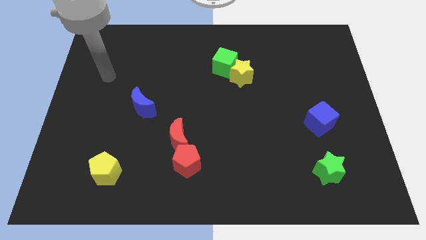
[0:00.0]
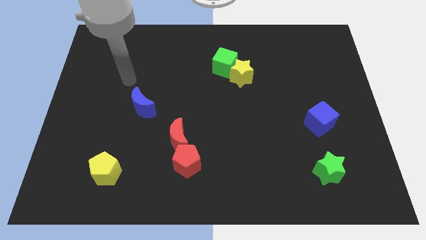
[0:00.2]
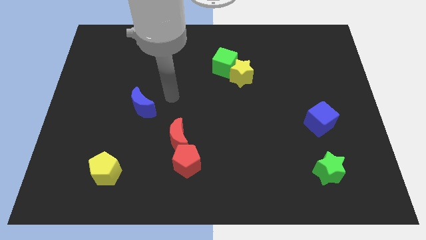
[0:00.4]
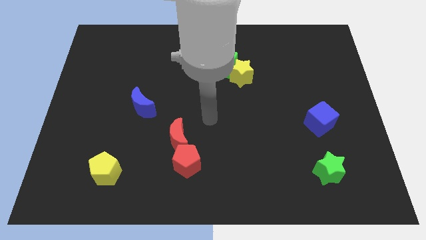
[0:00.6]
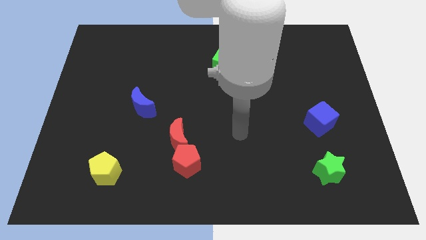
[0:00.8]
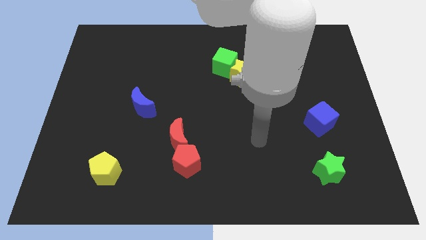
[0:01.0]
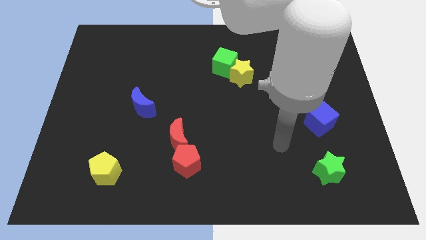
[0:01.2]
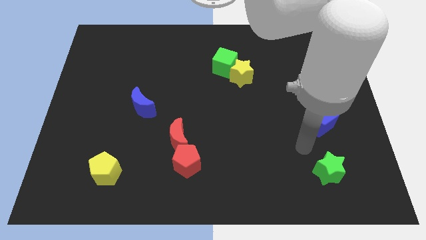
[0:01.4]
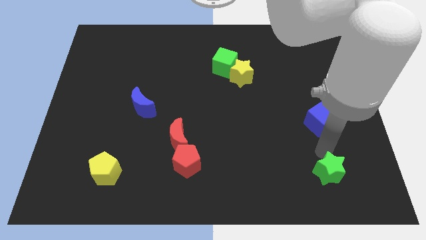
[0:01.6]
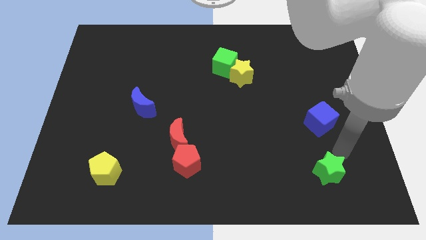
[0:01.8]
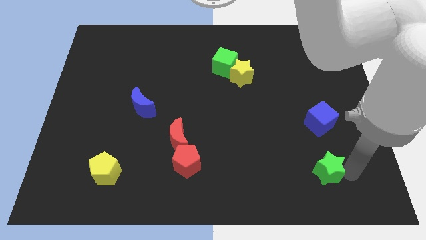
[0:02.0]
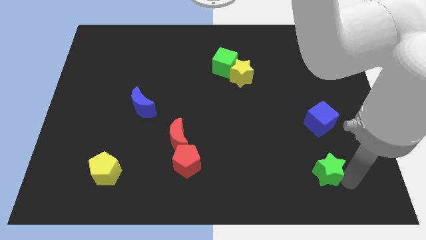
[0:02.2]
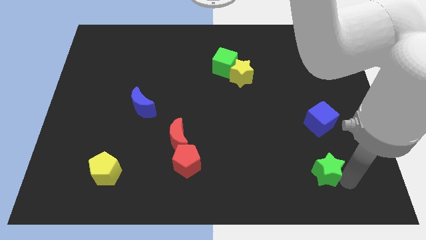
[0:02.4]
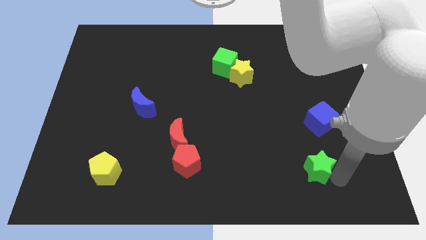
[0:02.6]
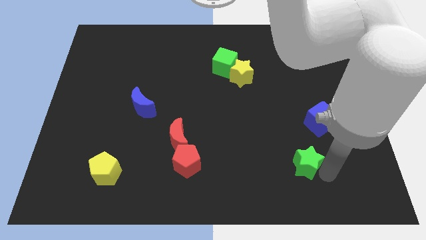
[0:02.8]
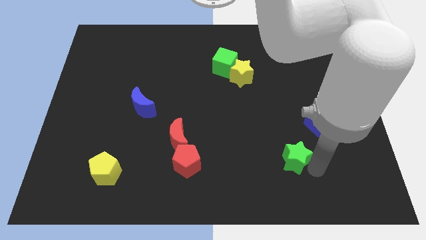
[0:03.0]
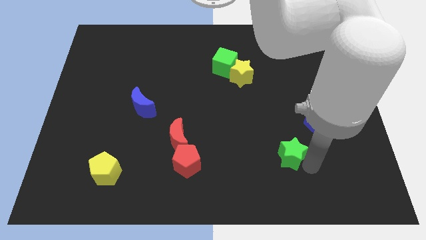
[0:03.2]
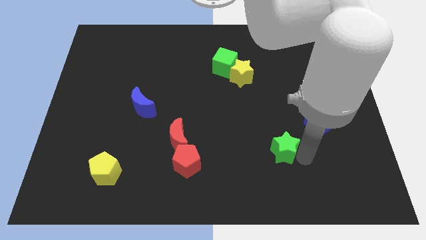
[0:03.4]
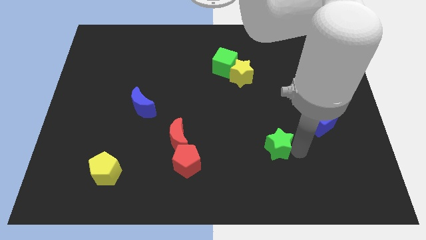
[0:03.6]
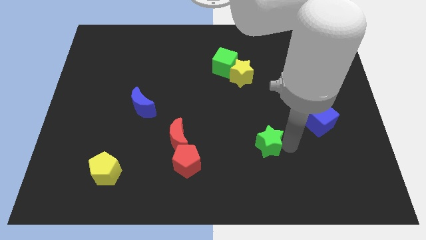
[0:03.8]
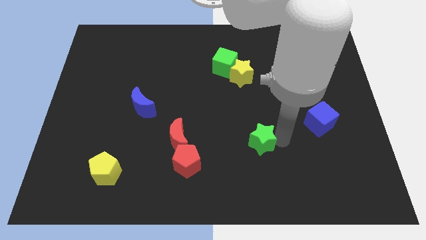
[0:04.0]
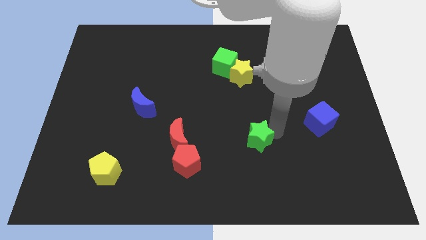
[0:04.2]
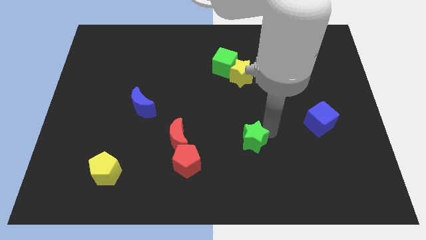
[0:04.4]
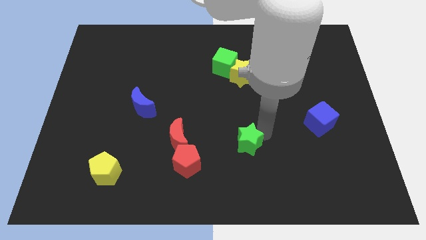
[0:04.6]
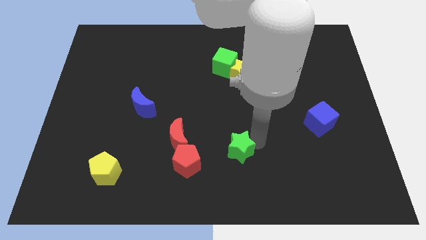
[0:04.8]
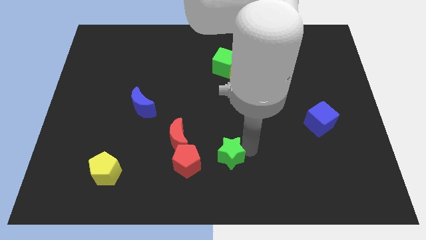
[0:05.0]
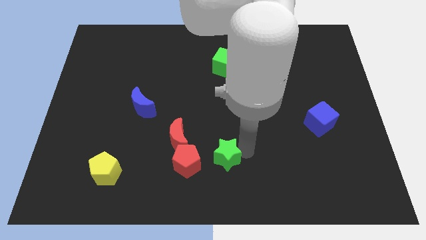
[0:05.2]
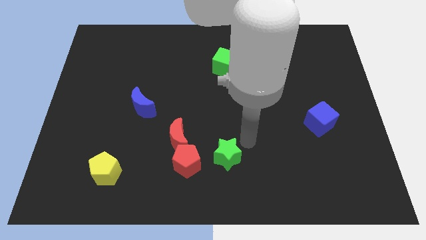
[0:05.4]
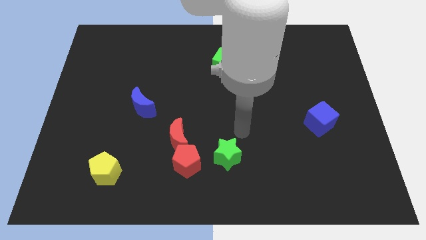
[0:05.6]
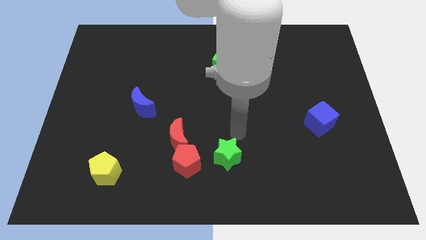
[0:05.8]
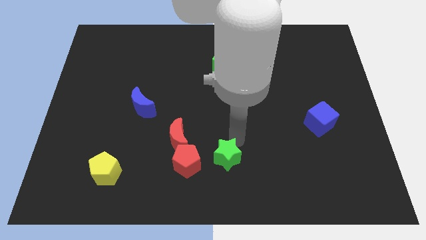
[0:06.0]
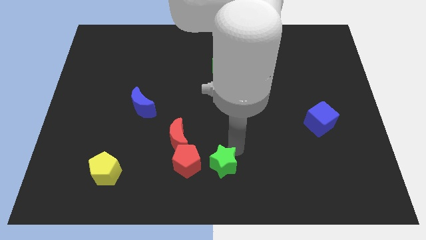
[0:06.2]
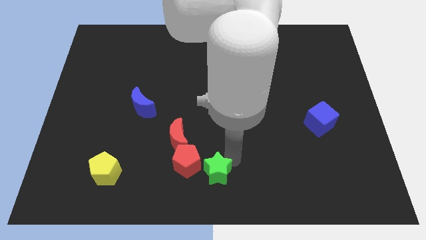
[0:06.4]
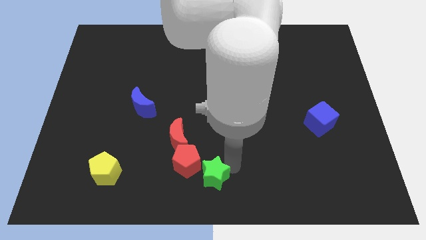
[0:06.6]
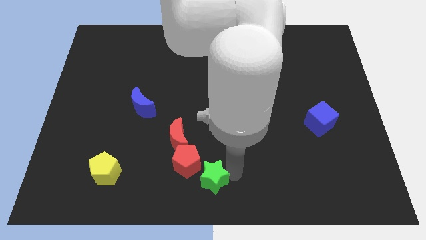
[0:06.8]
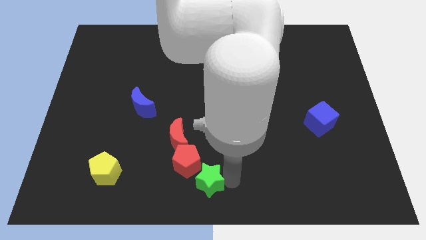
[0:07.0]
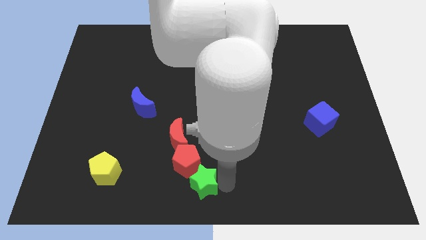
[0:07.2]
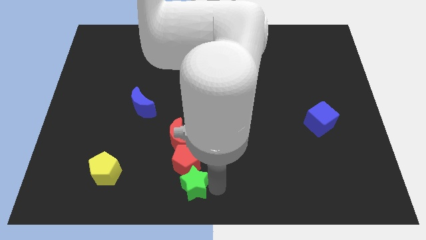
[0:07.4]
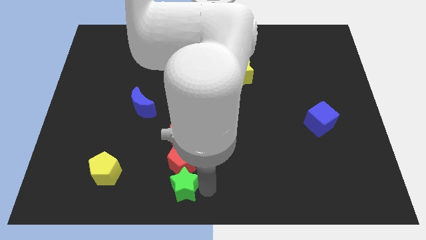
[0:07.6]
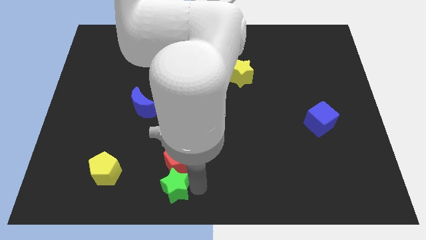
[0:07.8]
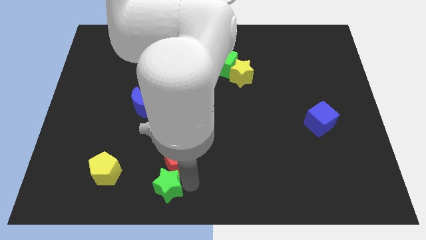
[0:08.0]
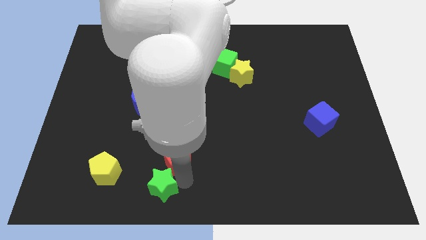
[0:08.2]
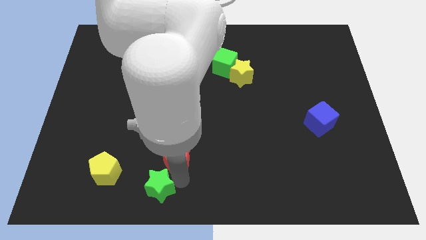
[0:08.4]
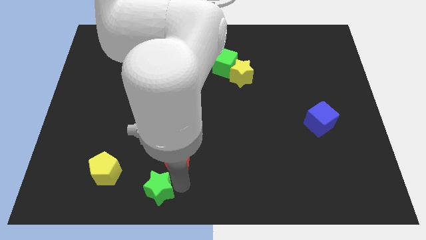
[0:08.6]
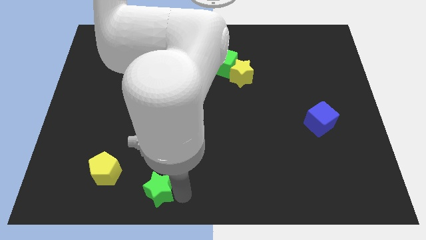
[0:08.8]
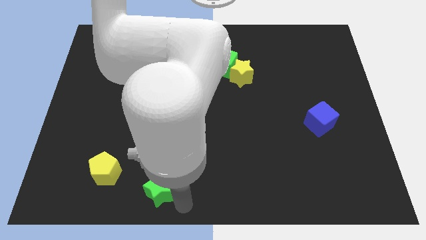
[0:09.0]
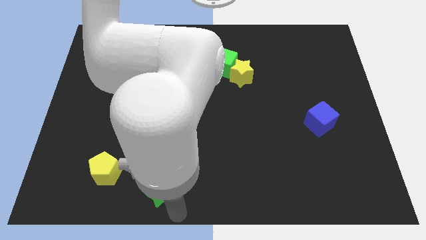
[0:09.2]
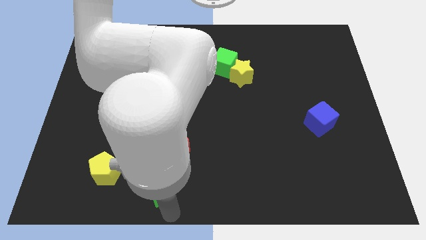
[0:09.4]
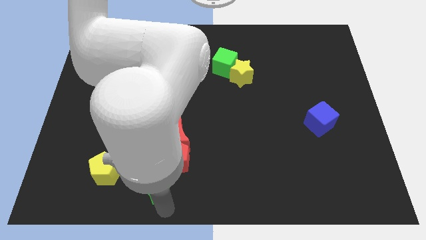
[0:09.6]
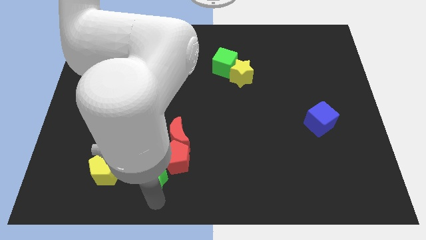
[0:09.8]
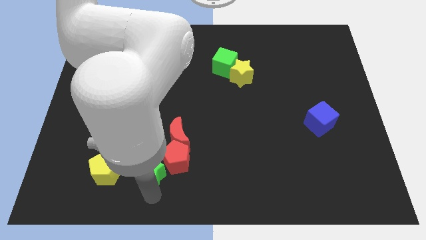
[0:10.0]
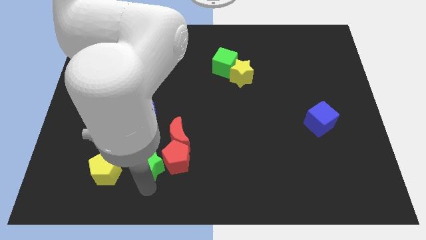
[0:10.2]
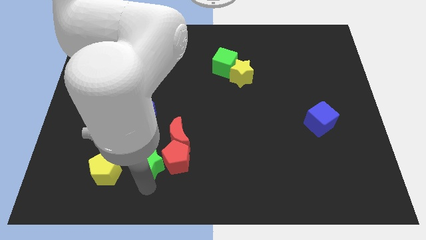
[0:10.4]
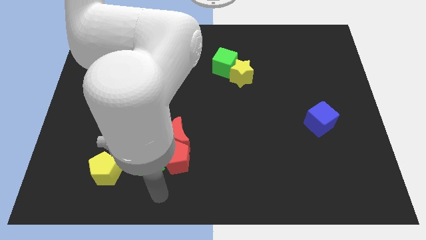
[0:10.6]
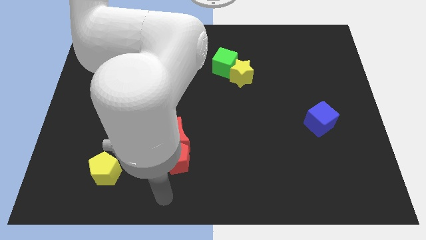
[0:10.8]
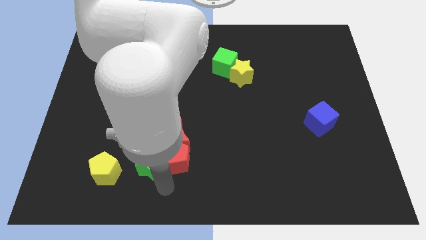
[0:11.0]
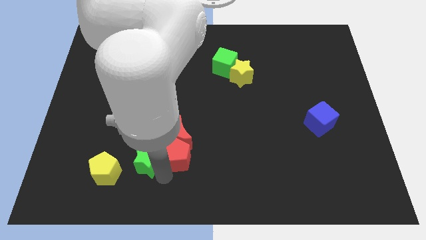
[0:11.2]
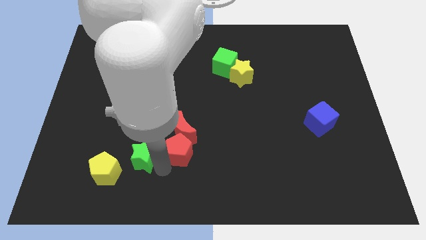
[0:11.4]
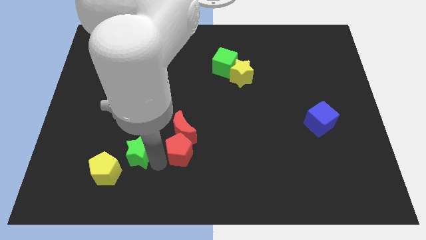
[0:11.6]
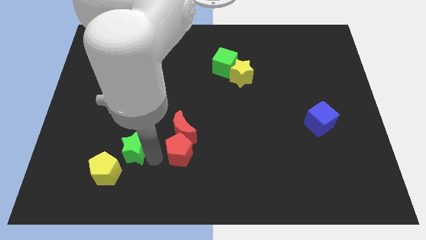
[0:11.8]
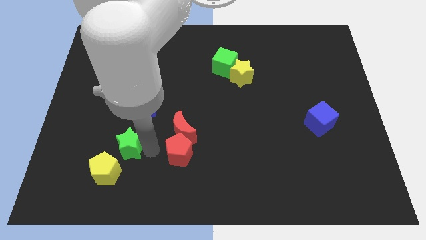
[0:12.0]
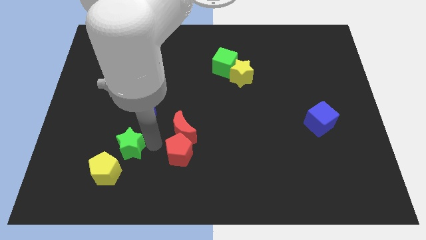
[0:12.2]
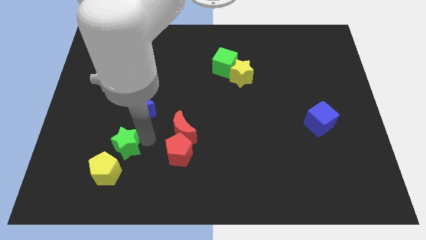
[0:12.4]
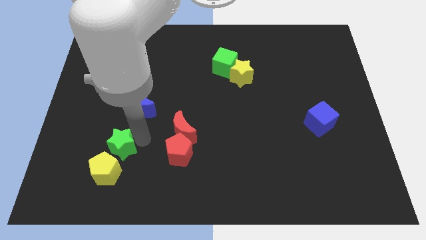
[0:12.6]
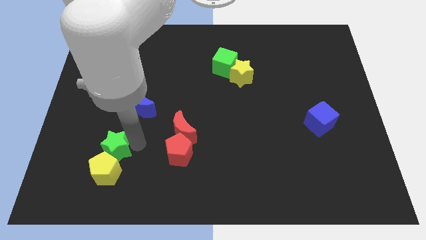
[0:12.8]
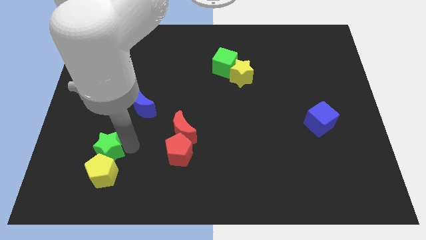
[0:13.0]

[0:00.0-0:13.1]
put the green star towards the yellow pentagon

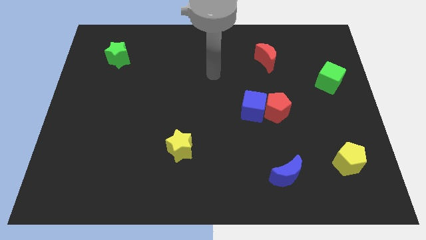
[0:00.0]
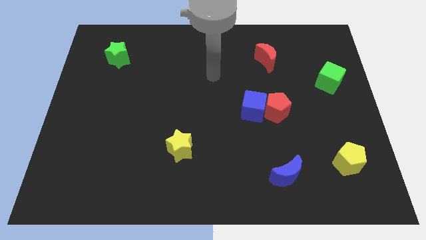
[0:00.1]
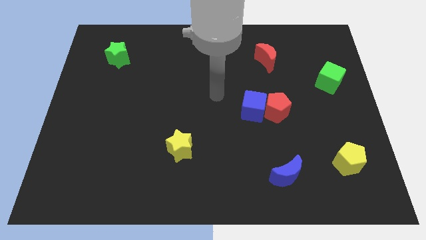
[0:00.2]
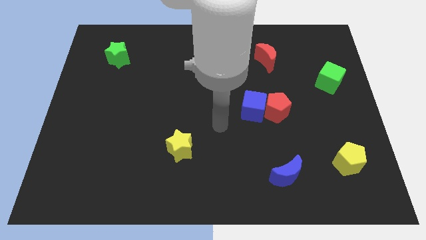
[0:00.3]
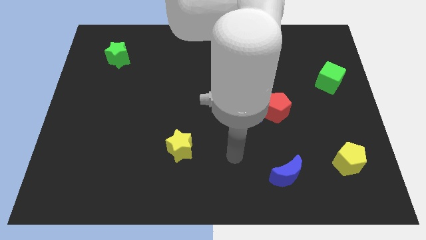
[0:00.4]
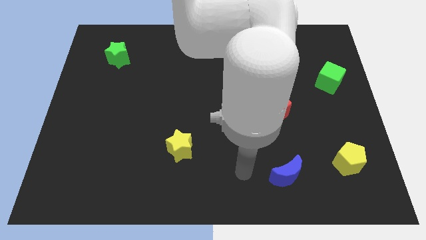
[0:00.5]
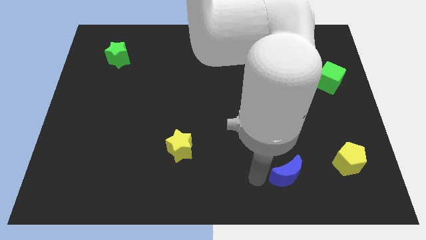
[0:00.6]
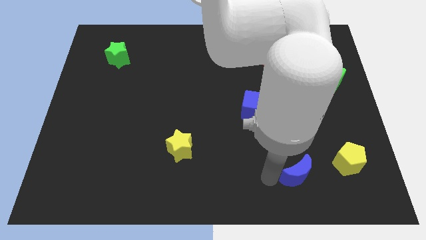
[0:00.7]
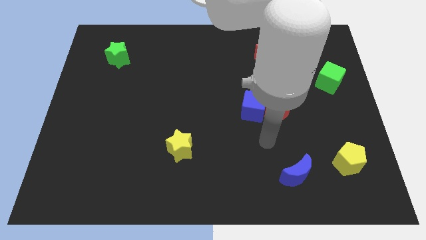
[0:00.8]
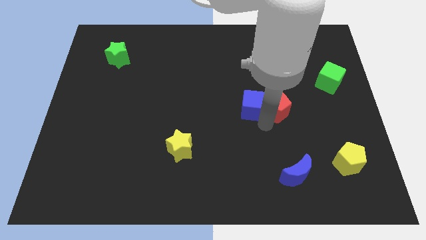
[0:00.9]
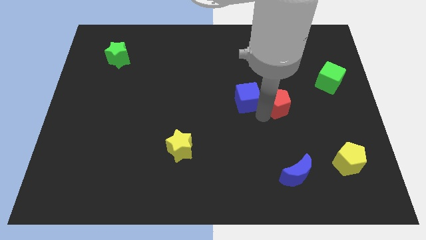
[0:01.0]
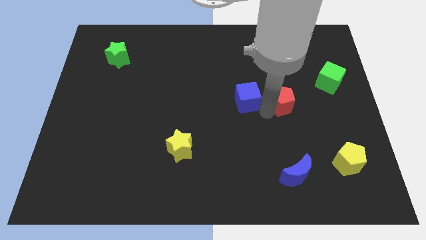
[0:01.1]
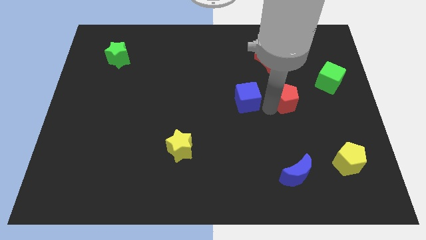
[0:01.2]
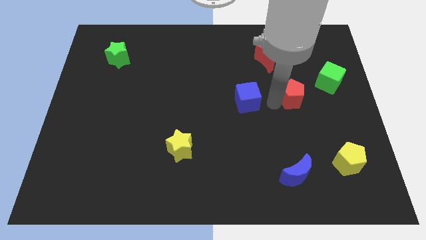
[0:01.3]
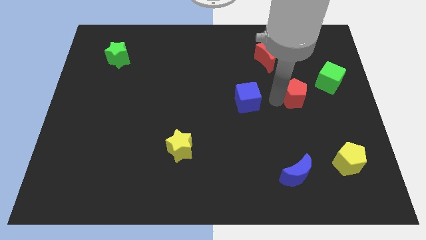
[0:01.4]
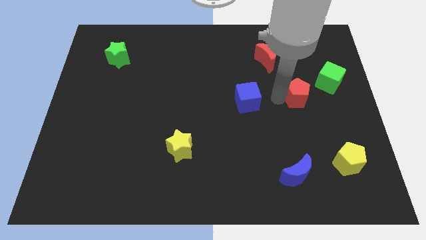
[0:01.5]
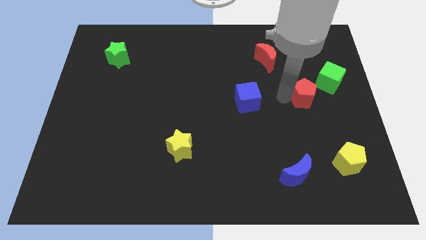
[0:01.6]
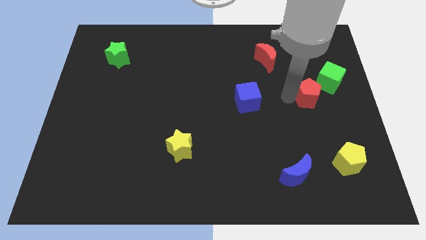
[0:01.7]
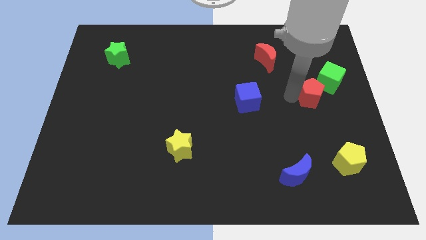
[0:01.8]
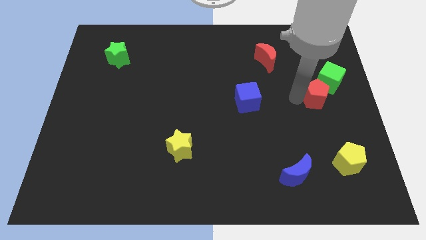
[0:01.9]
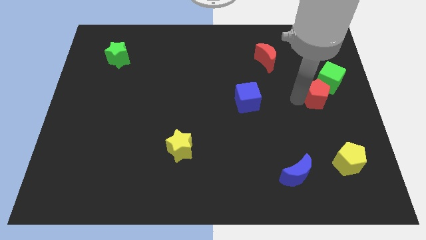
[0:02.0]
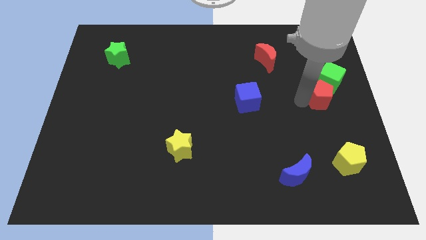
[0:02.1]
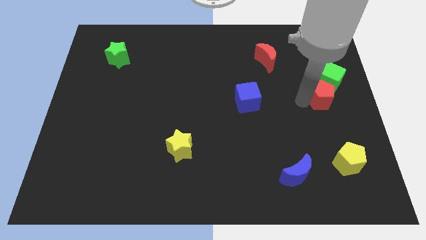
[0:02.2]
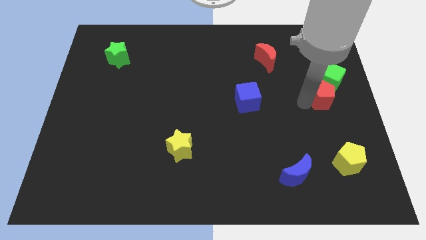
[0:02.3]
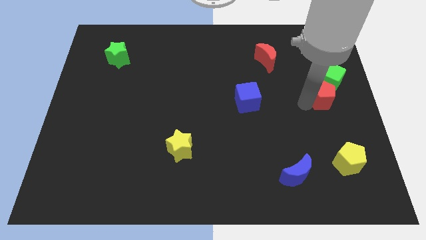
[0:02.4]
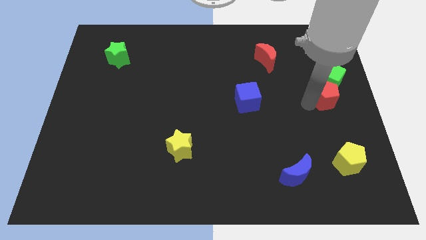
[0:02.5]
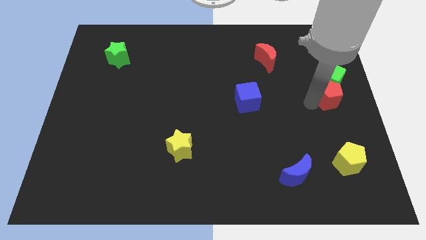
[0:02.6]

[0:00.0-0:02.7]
push the red pentagon to the green cube
